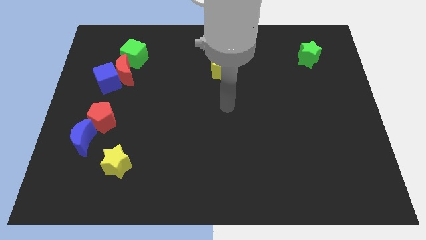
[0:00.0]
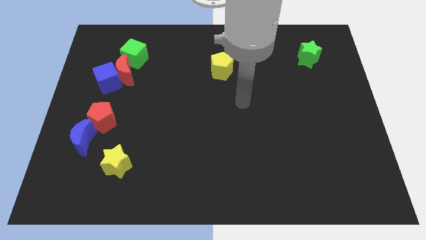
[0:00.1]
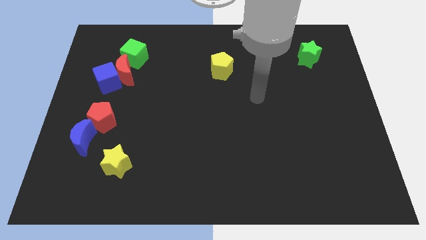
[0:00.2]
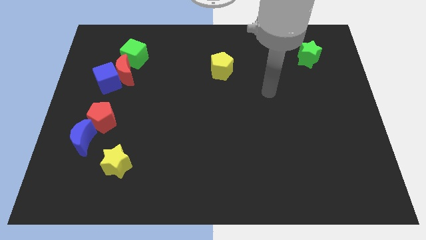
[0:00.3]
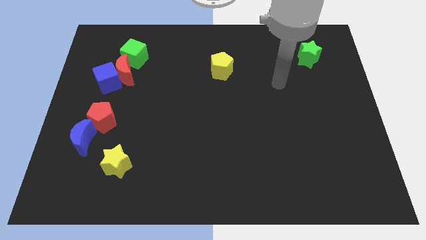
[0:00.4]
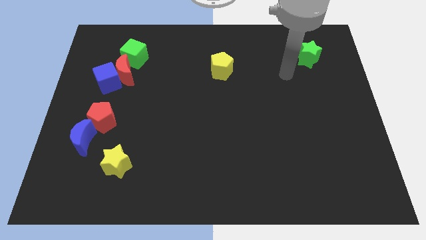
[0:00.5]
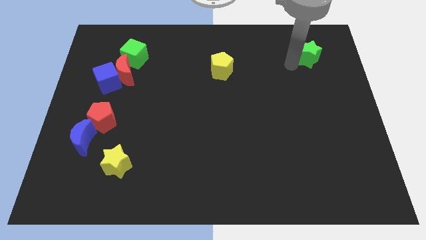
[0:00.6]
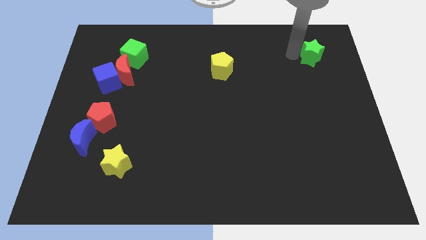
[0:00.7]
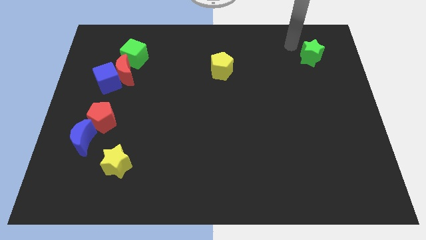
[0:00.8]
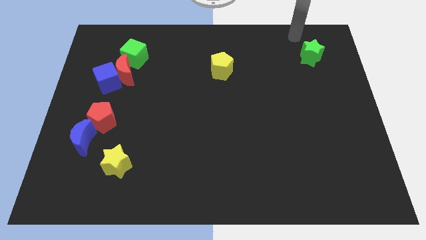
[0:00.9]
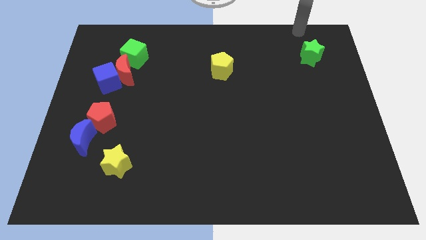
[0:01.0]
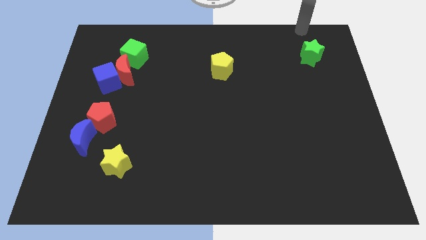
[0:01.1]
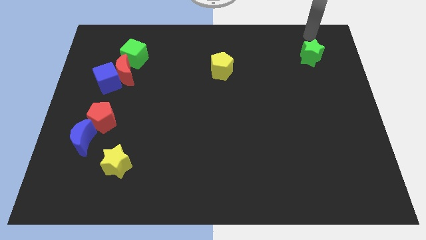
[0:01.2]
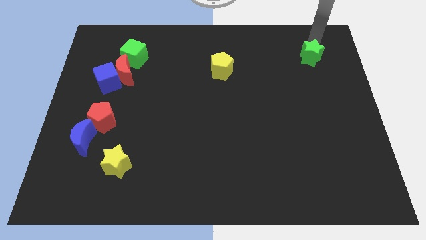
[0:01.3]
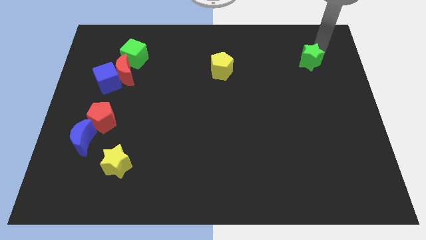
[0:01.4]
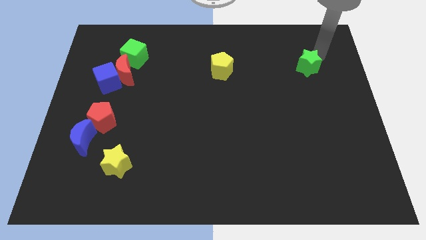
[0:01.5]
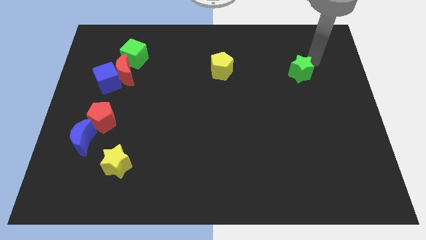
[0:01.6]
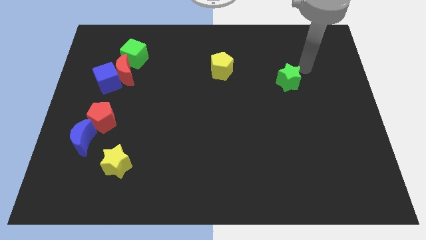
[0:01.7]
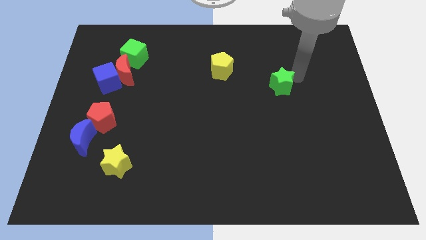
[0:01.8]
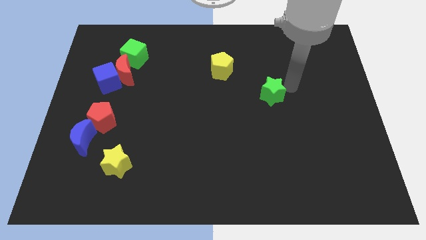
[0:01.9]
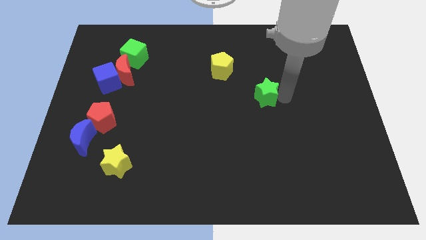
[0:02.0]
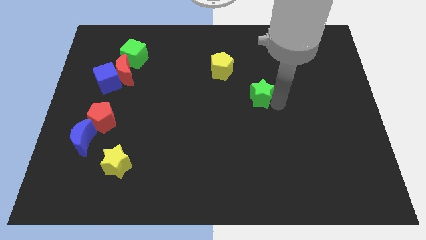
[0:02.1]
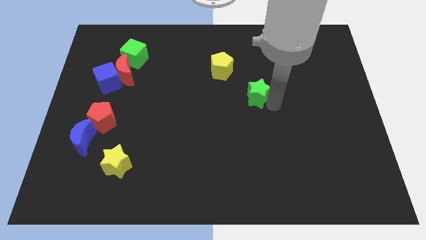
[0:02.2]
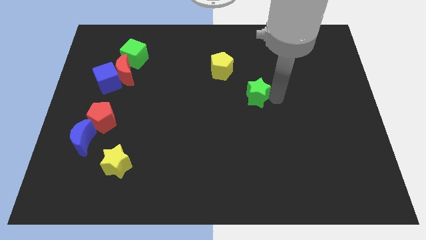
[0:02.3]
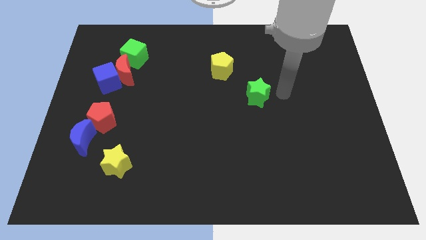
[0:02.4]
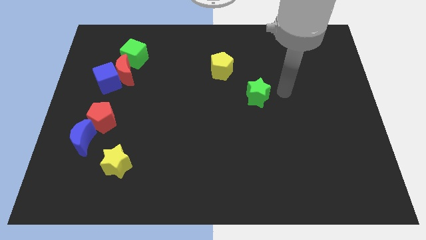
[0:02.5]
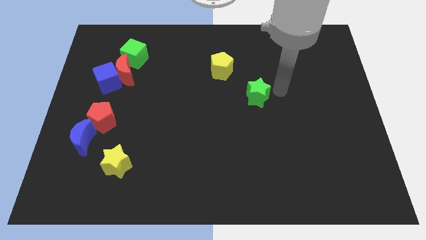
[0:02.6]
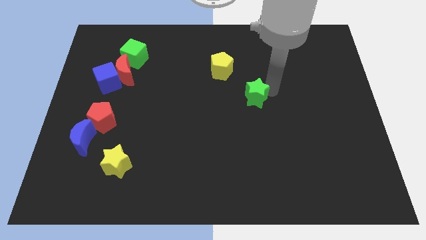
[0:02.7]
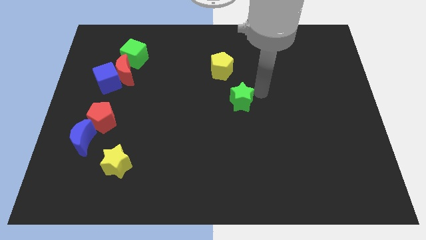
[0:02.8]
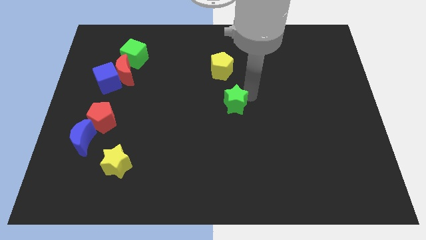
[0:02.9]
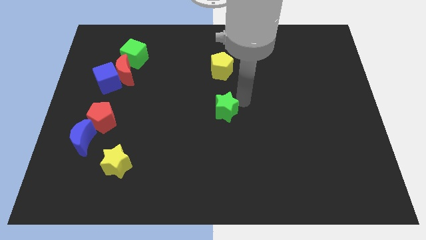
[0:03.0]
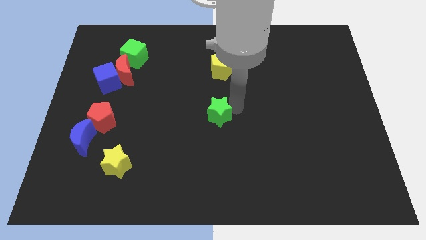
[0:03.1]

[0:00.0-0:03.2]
place the green star at the center of the board

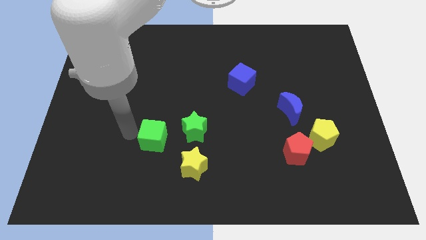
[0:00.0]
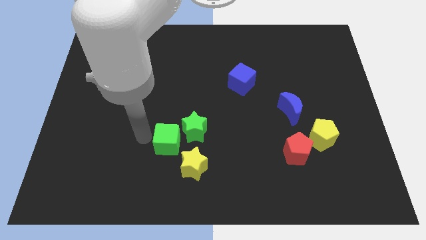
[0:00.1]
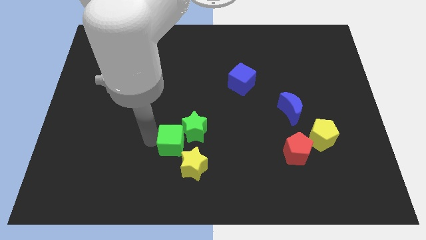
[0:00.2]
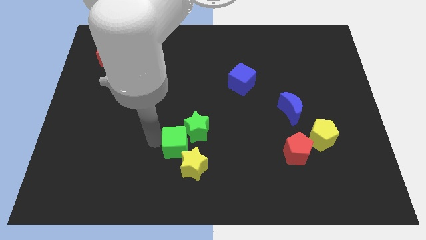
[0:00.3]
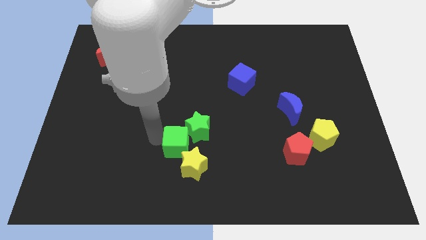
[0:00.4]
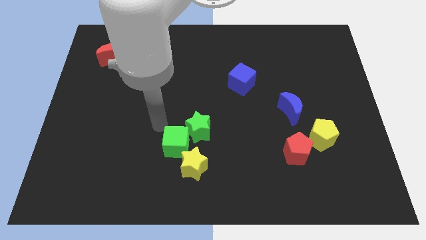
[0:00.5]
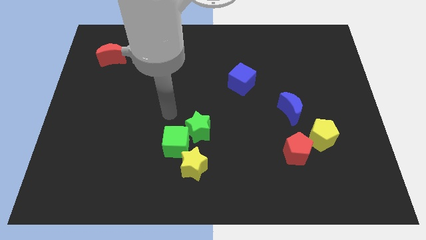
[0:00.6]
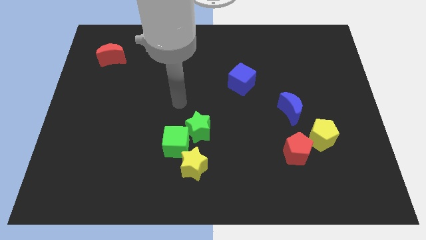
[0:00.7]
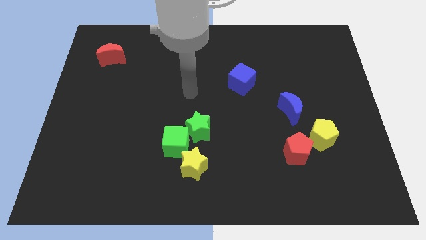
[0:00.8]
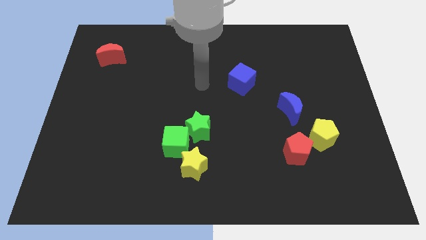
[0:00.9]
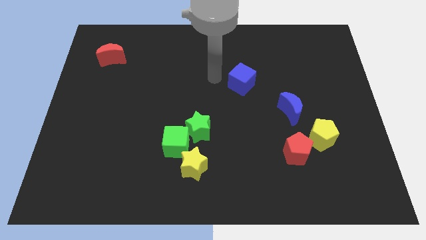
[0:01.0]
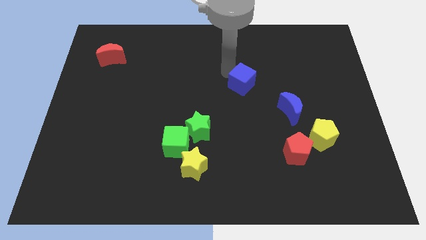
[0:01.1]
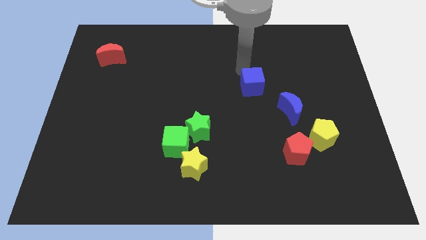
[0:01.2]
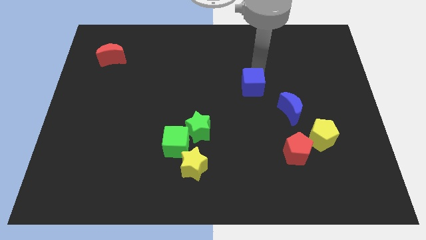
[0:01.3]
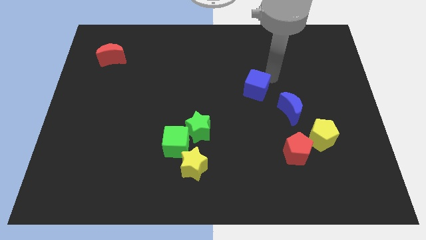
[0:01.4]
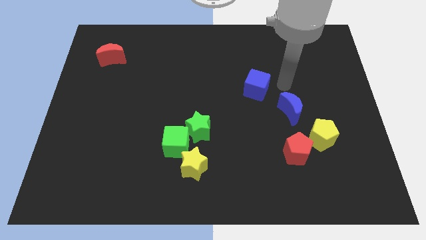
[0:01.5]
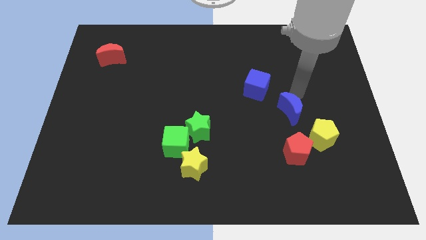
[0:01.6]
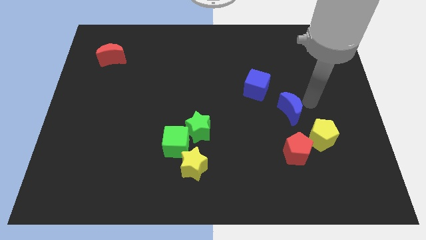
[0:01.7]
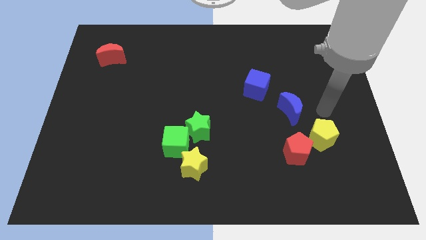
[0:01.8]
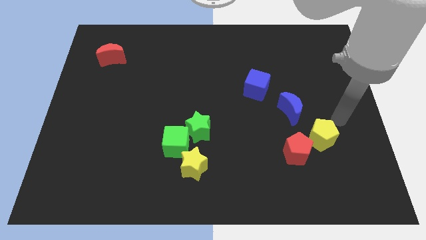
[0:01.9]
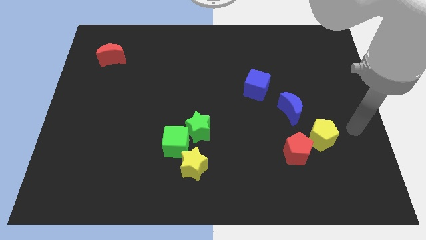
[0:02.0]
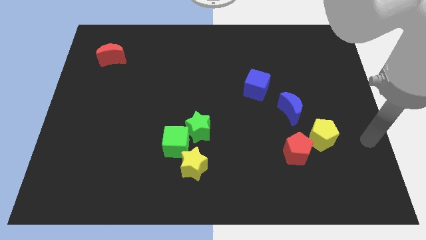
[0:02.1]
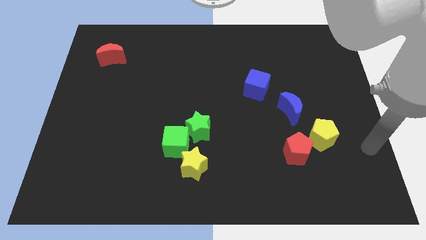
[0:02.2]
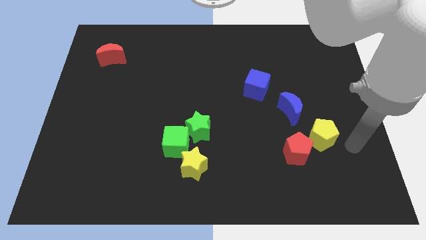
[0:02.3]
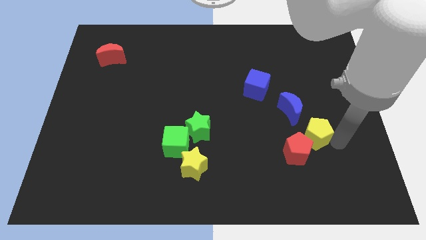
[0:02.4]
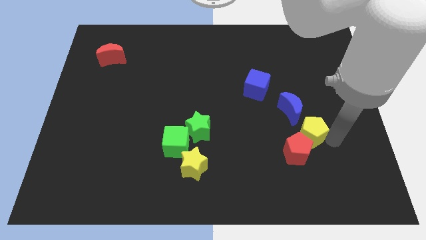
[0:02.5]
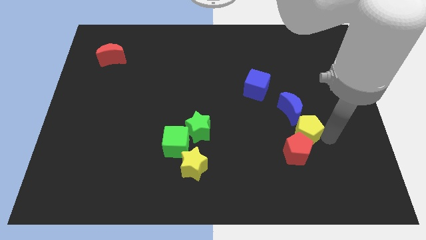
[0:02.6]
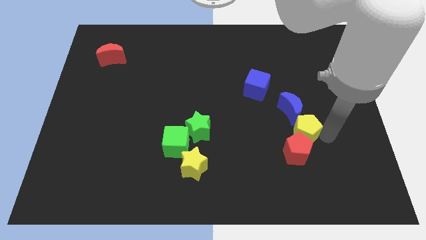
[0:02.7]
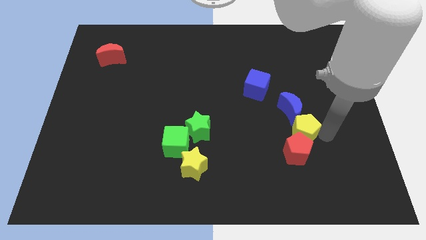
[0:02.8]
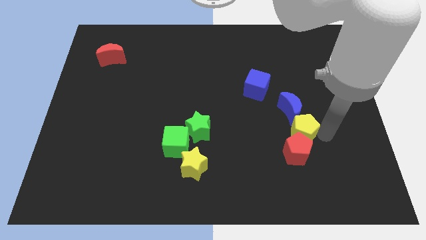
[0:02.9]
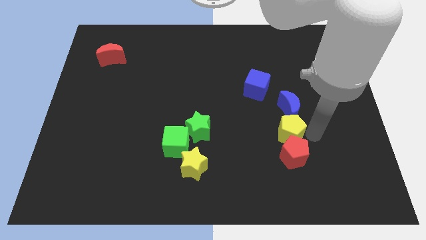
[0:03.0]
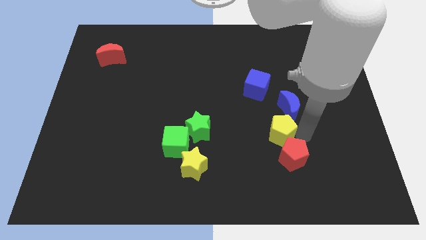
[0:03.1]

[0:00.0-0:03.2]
put the yellow pentagon vertically below the blue moon

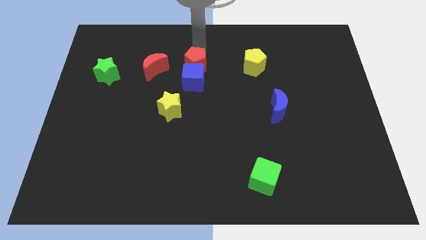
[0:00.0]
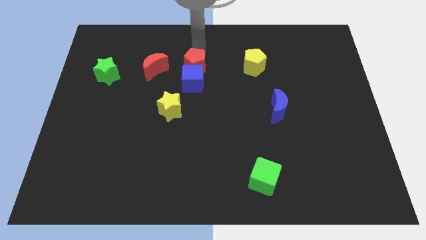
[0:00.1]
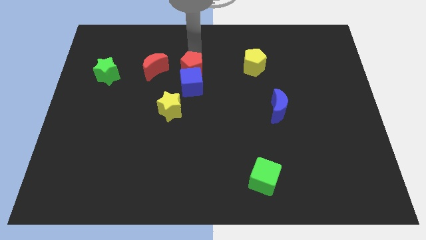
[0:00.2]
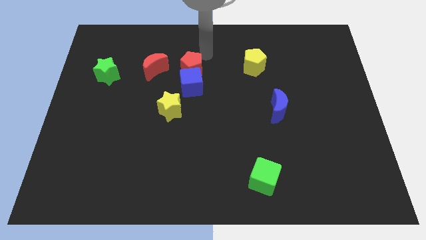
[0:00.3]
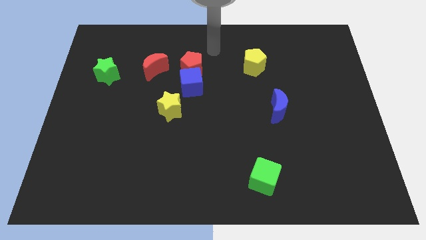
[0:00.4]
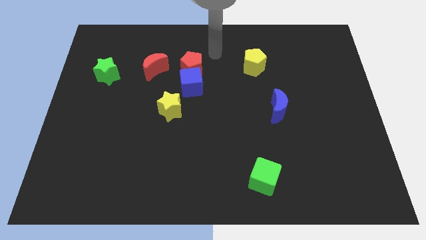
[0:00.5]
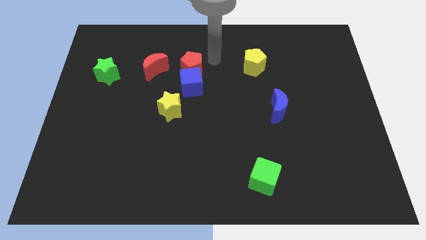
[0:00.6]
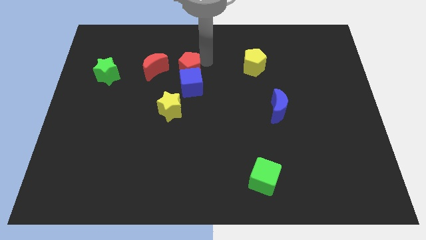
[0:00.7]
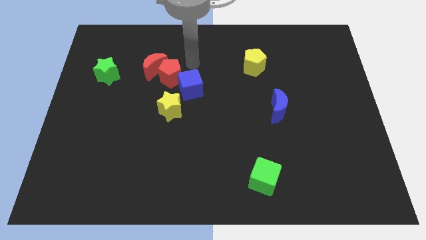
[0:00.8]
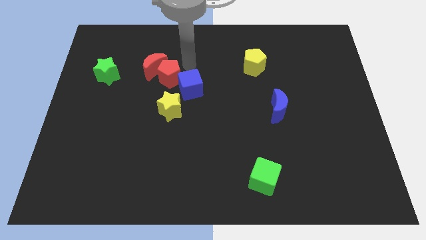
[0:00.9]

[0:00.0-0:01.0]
place the red pentagon in between the red moon and blue cube

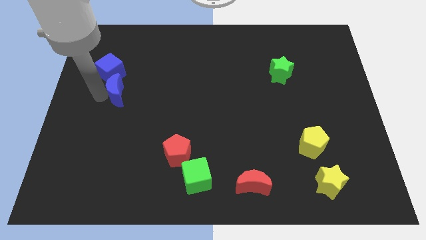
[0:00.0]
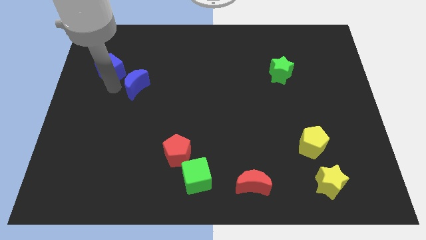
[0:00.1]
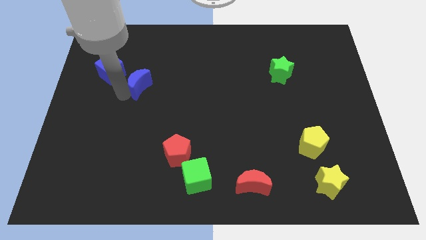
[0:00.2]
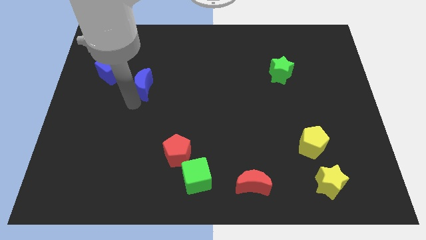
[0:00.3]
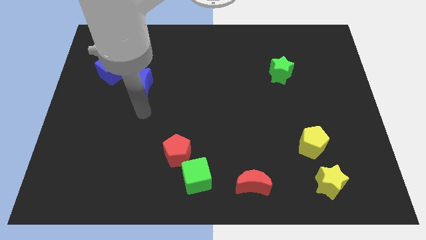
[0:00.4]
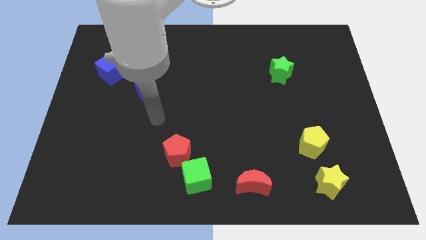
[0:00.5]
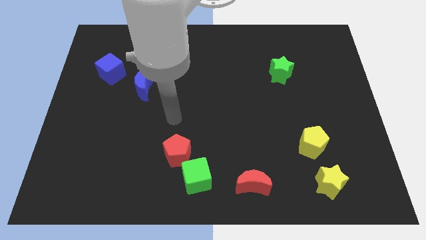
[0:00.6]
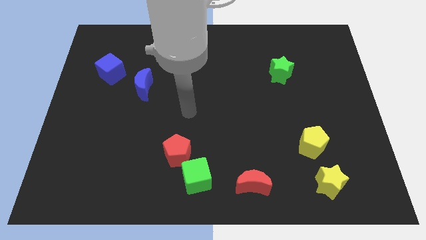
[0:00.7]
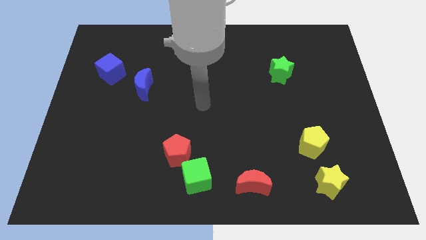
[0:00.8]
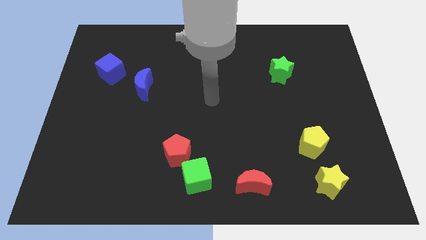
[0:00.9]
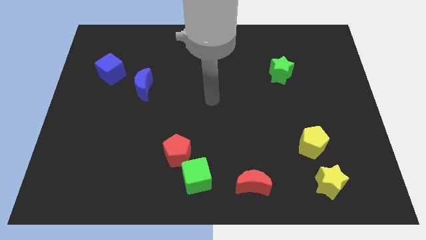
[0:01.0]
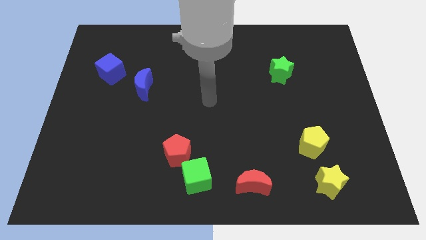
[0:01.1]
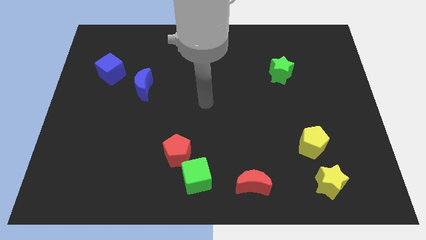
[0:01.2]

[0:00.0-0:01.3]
push the blue crescent away from the blue cube

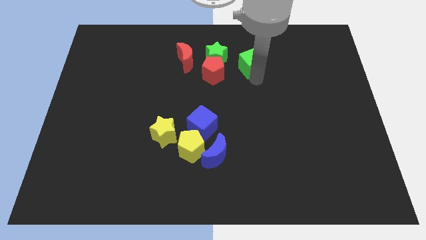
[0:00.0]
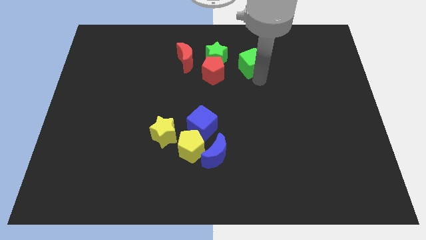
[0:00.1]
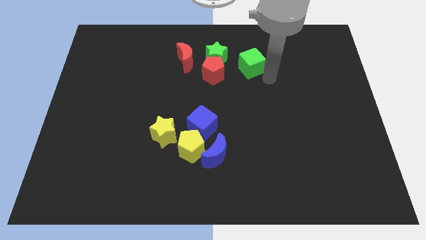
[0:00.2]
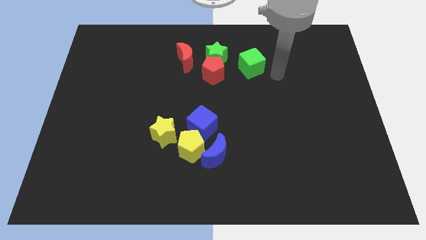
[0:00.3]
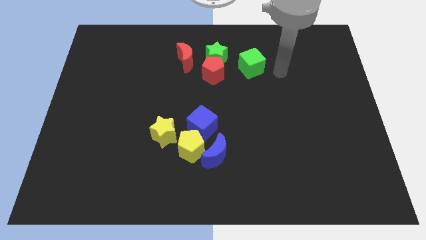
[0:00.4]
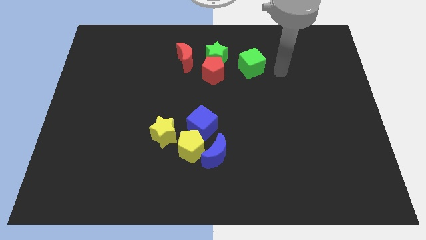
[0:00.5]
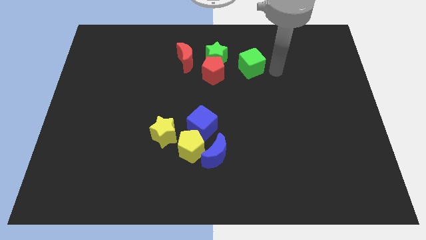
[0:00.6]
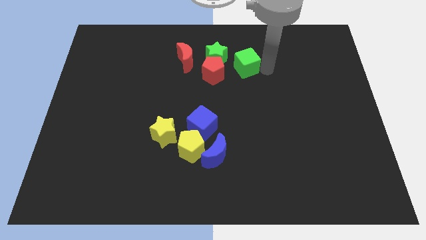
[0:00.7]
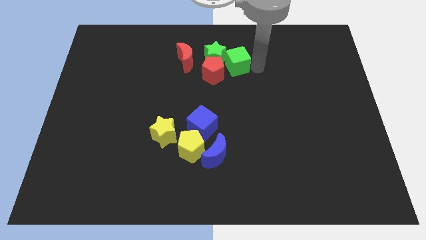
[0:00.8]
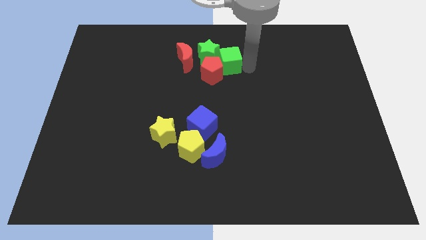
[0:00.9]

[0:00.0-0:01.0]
move green cube towards green star
